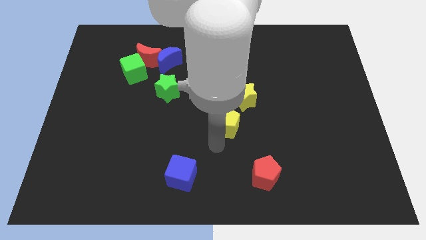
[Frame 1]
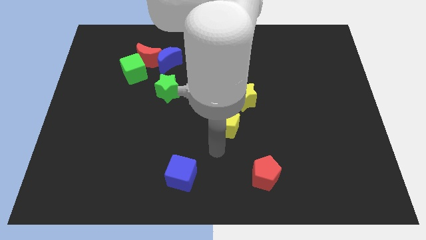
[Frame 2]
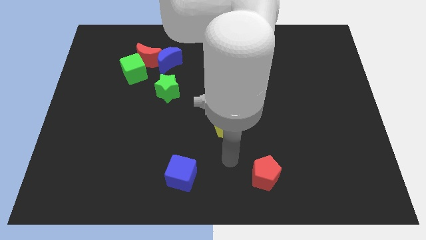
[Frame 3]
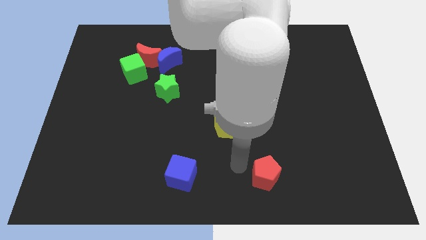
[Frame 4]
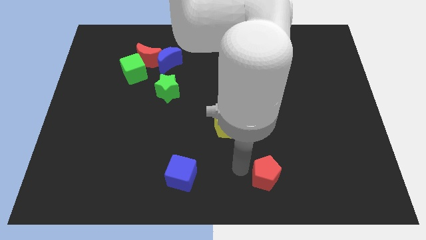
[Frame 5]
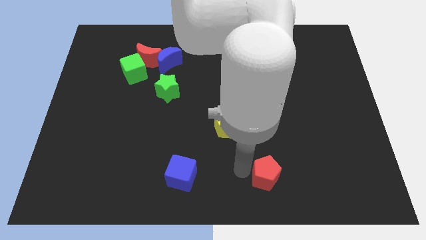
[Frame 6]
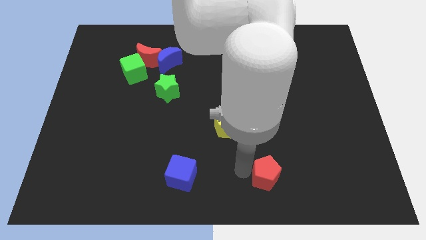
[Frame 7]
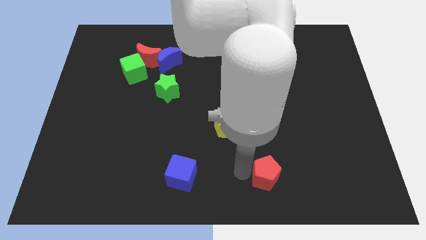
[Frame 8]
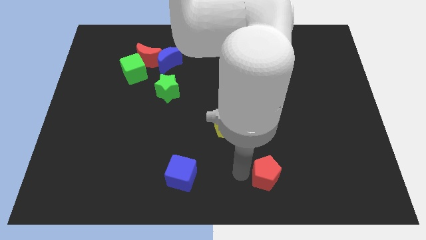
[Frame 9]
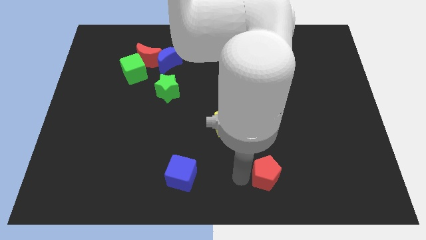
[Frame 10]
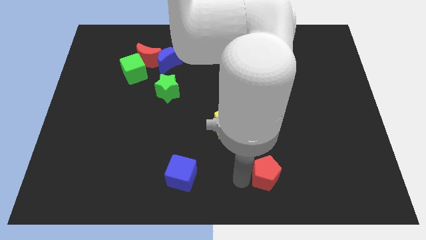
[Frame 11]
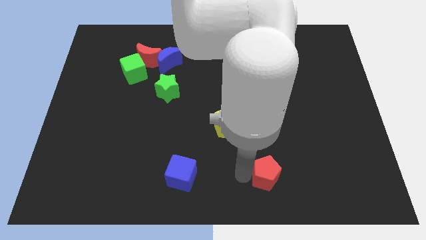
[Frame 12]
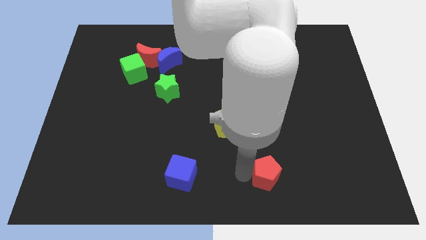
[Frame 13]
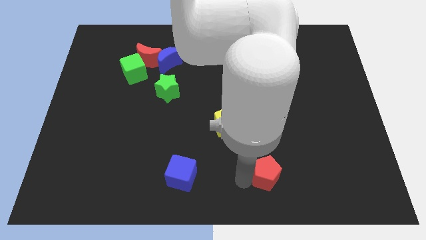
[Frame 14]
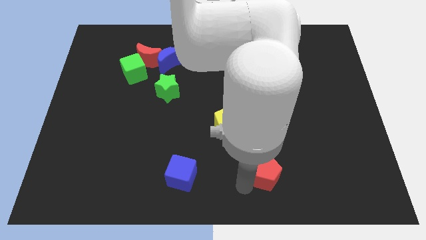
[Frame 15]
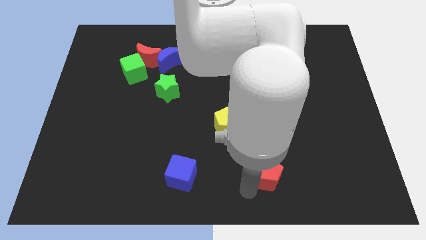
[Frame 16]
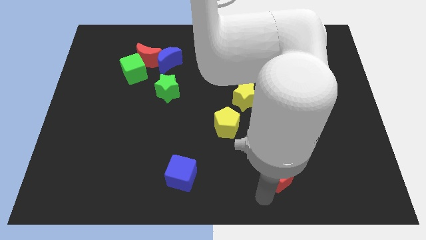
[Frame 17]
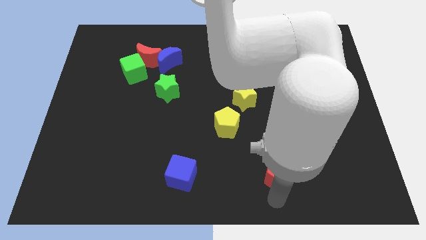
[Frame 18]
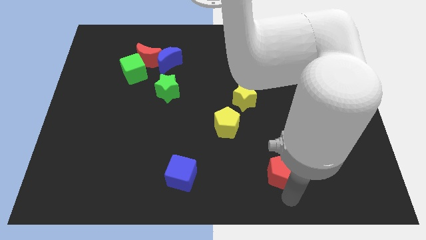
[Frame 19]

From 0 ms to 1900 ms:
move red pentagon slightly to the right of the board

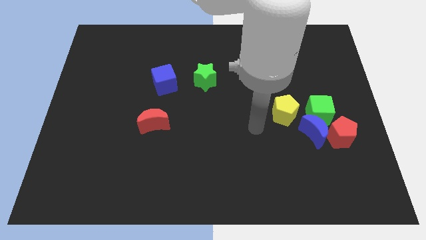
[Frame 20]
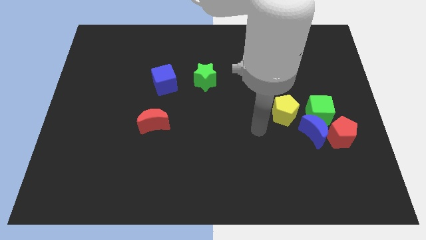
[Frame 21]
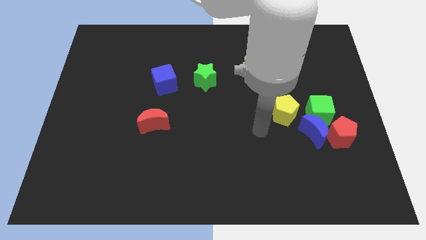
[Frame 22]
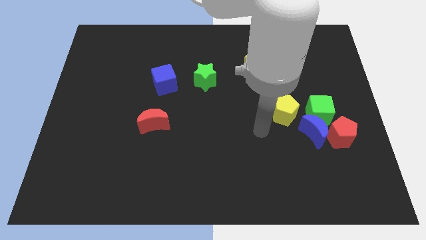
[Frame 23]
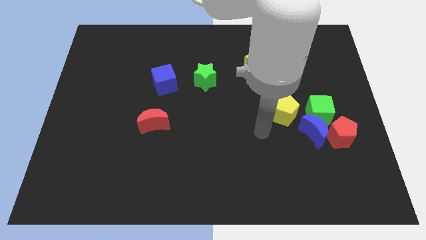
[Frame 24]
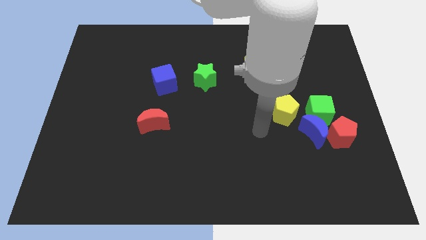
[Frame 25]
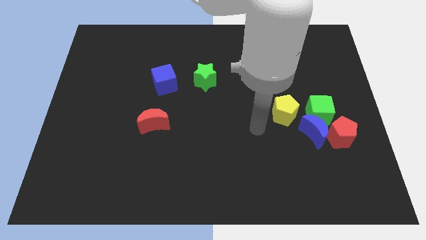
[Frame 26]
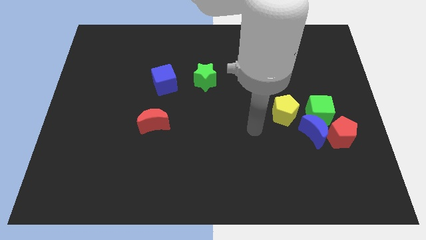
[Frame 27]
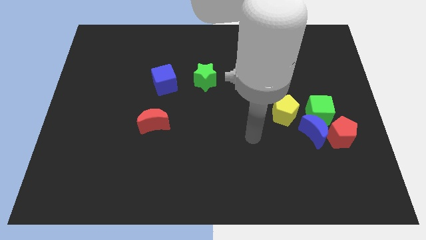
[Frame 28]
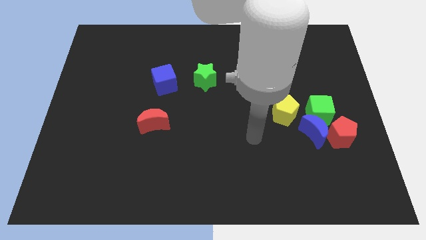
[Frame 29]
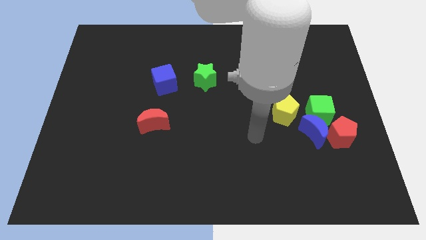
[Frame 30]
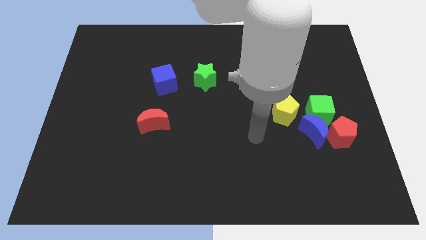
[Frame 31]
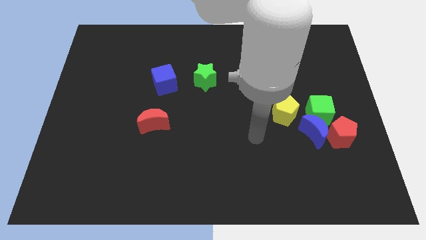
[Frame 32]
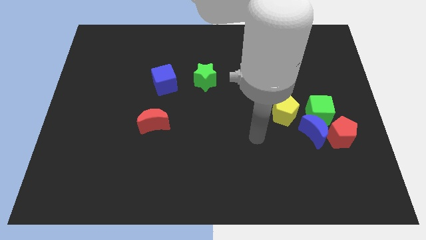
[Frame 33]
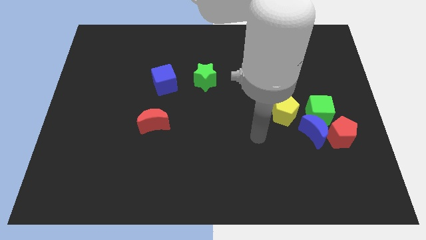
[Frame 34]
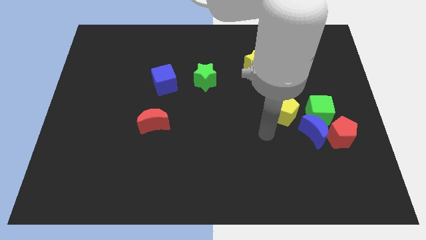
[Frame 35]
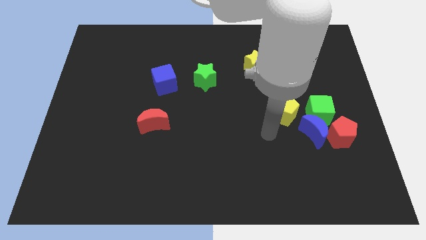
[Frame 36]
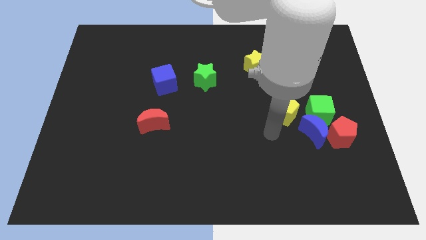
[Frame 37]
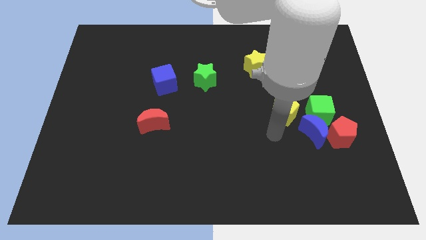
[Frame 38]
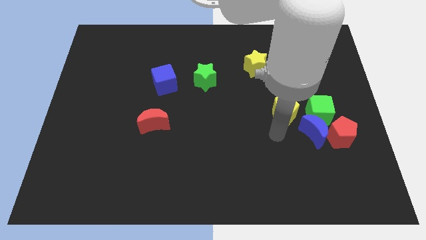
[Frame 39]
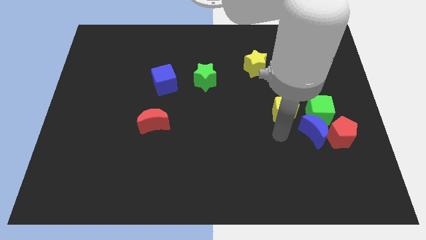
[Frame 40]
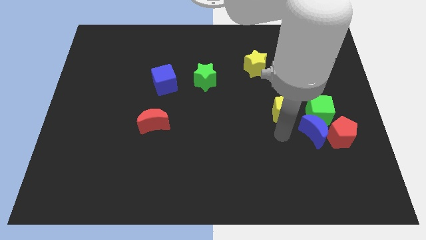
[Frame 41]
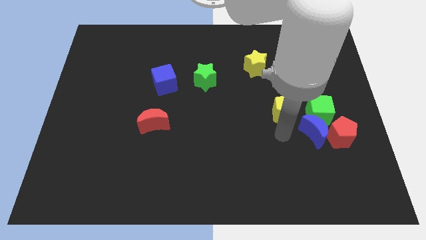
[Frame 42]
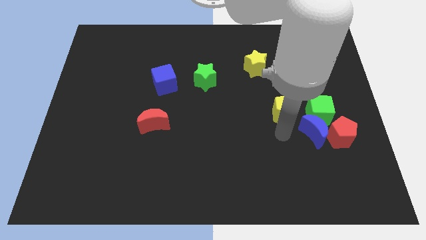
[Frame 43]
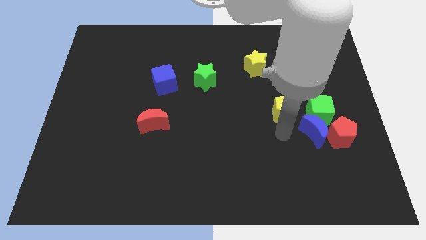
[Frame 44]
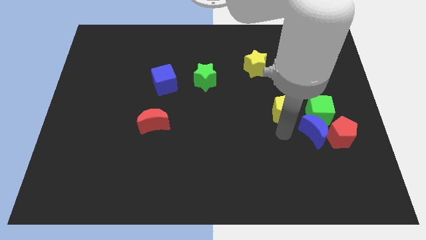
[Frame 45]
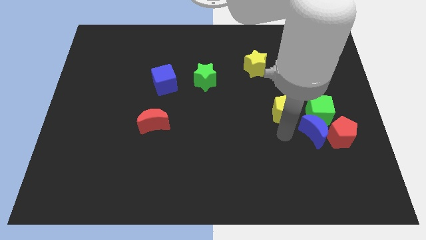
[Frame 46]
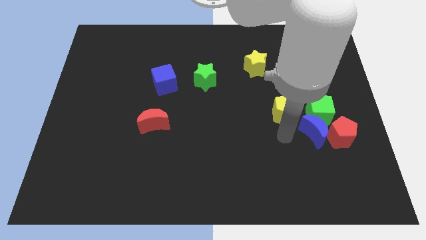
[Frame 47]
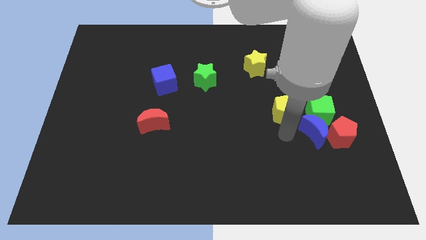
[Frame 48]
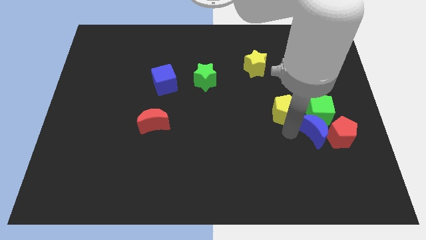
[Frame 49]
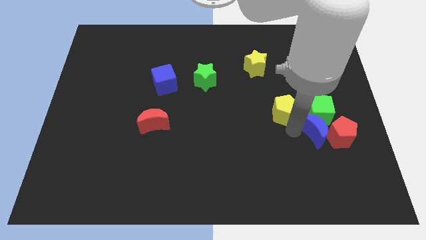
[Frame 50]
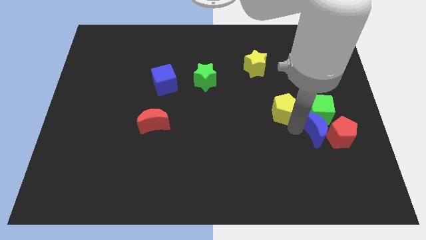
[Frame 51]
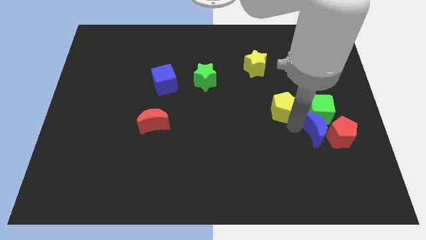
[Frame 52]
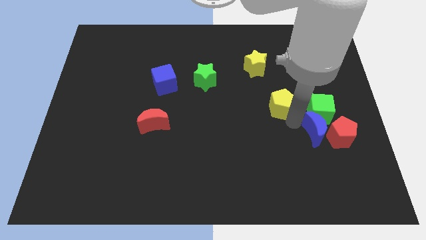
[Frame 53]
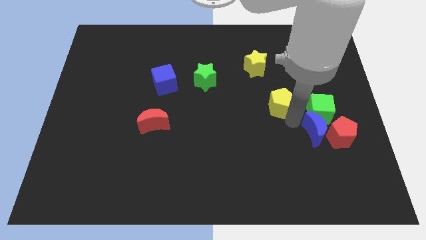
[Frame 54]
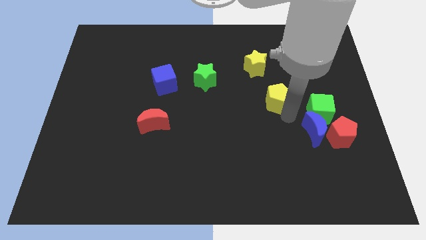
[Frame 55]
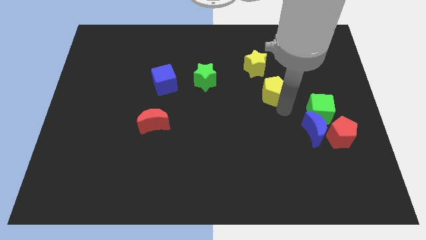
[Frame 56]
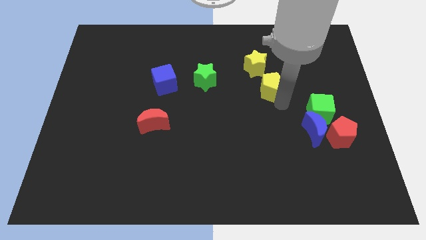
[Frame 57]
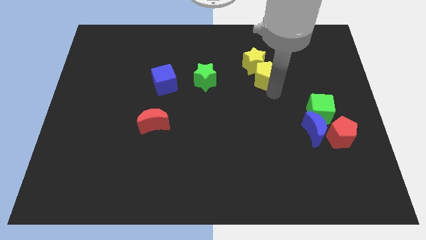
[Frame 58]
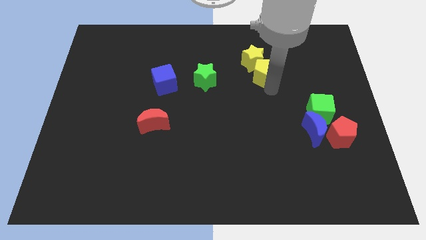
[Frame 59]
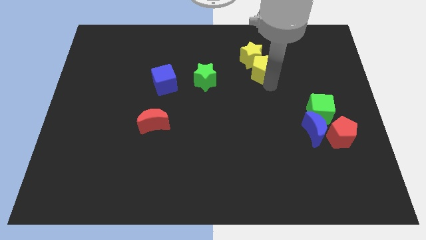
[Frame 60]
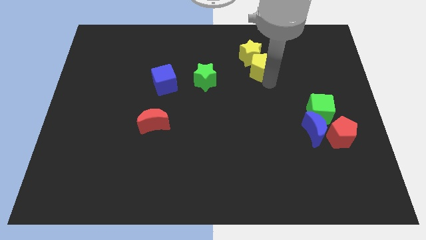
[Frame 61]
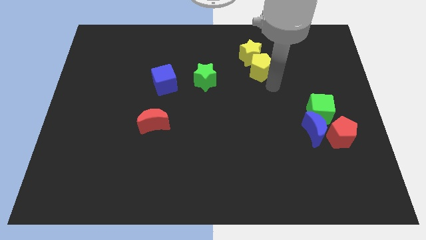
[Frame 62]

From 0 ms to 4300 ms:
push the yellow pentagon into the yellow star

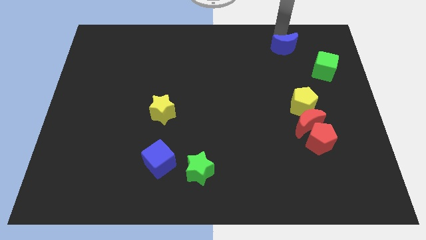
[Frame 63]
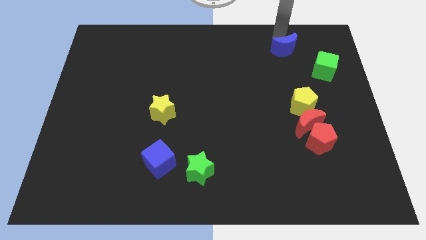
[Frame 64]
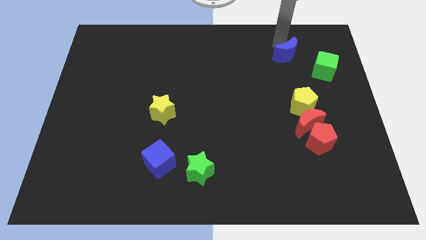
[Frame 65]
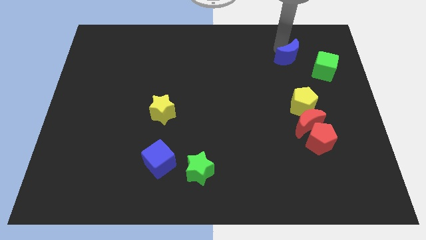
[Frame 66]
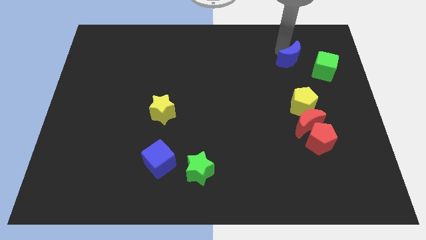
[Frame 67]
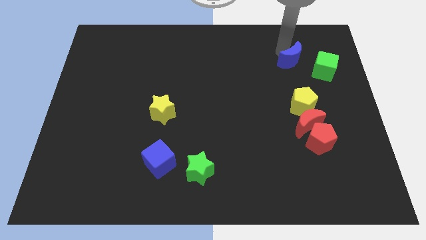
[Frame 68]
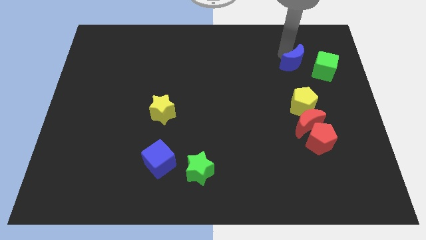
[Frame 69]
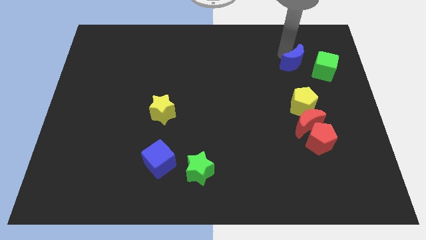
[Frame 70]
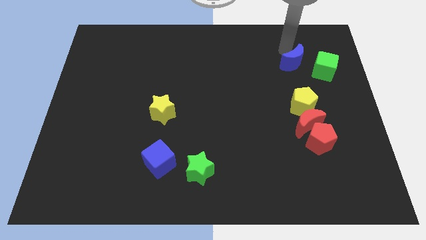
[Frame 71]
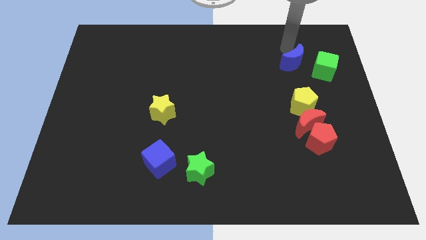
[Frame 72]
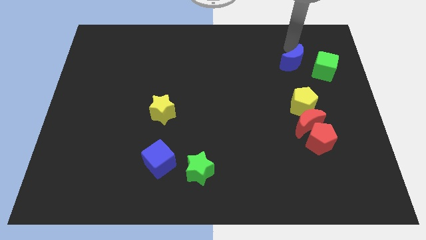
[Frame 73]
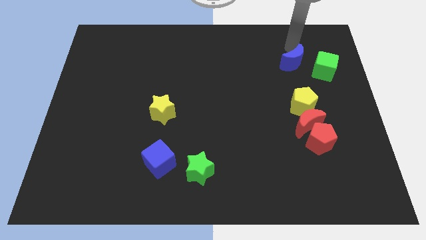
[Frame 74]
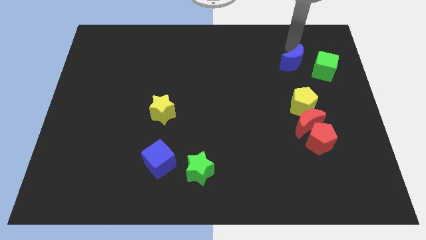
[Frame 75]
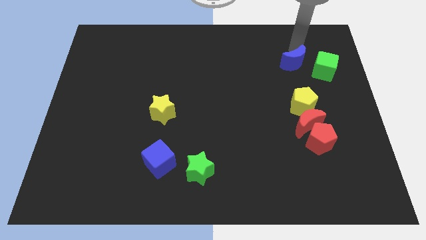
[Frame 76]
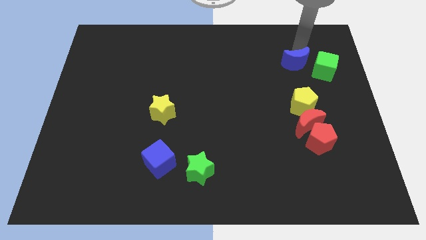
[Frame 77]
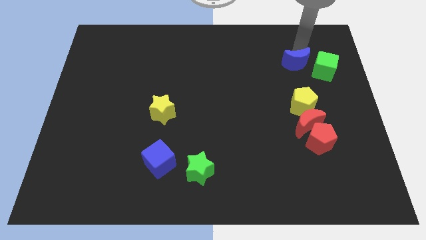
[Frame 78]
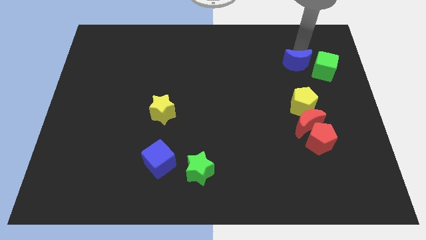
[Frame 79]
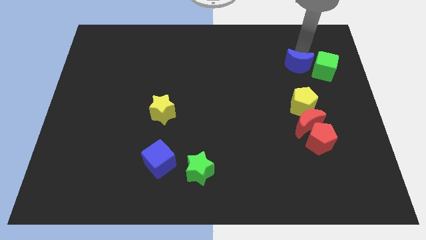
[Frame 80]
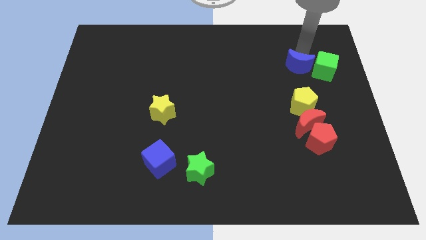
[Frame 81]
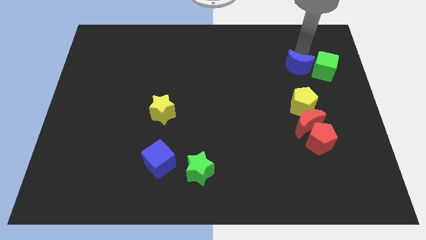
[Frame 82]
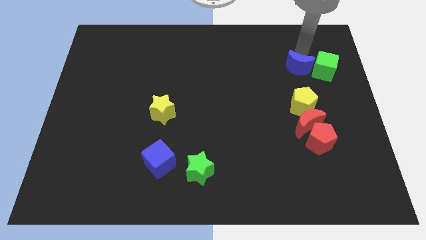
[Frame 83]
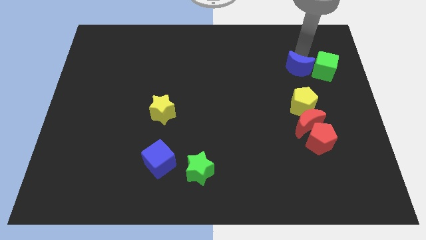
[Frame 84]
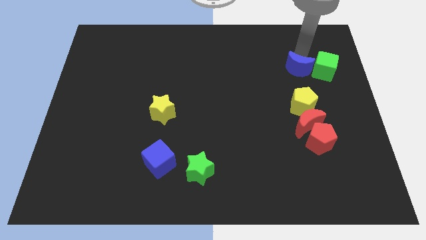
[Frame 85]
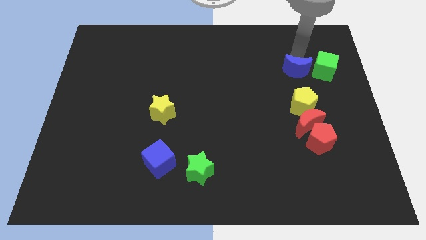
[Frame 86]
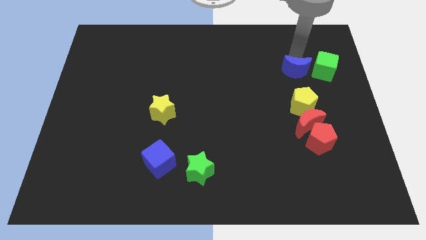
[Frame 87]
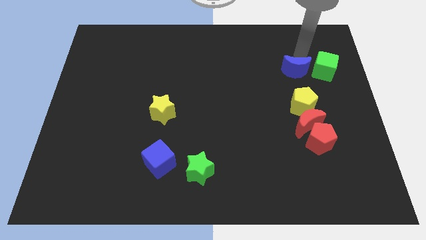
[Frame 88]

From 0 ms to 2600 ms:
move the blue moon close to the green cube

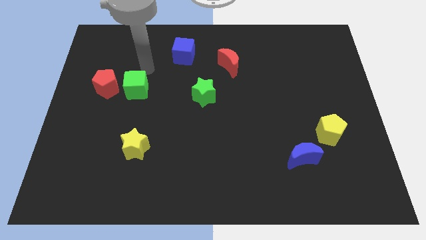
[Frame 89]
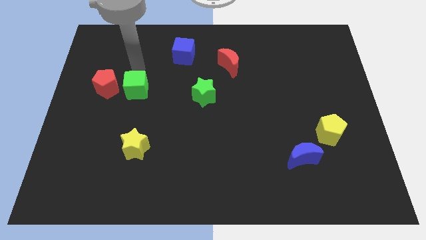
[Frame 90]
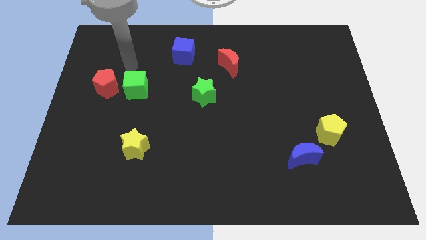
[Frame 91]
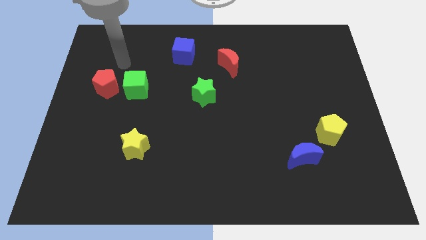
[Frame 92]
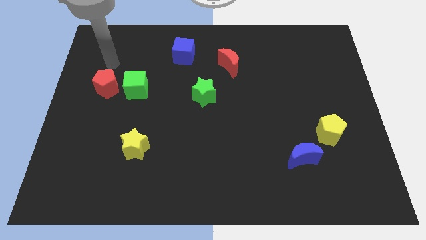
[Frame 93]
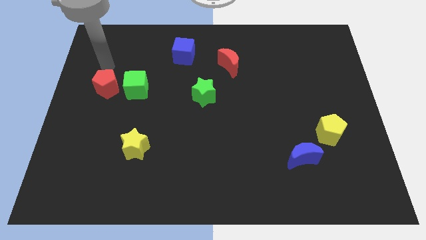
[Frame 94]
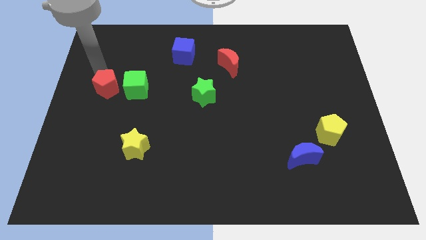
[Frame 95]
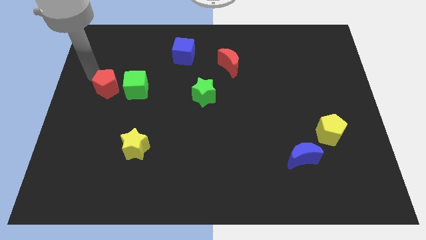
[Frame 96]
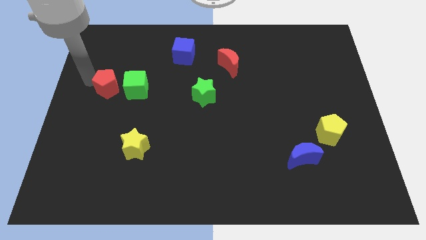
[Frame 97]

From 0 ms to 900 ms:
move the arm to the left of the red pentagon
